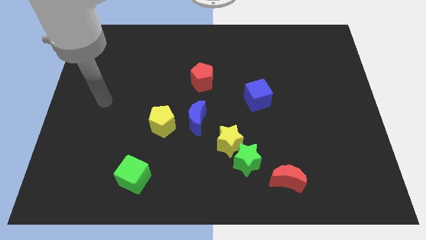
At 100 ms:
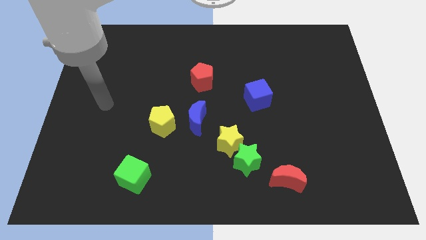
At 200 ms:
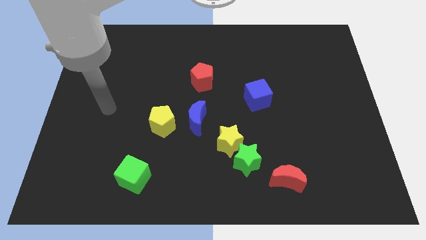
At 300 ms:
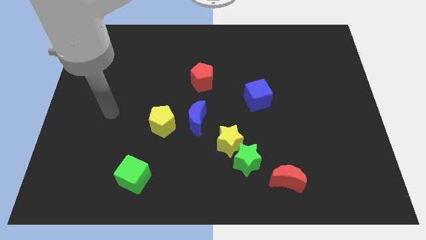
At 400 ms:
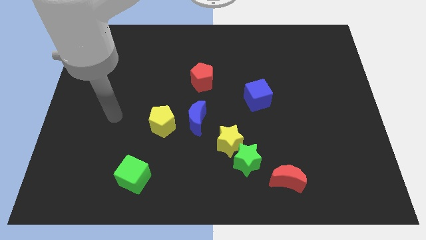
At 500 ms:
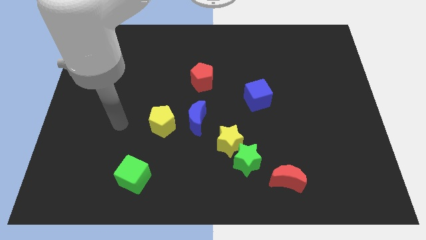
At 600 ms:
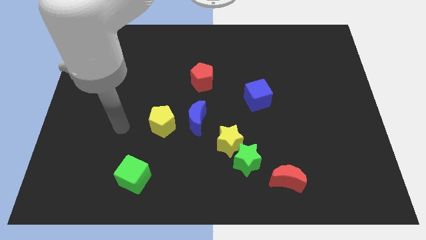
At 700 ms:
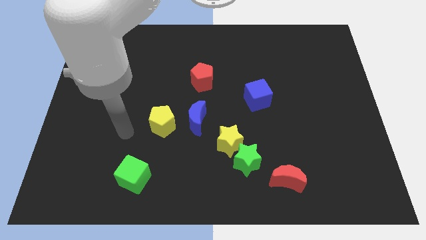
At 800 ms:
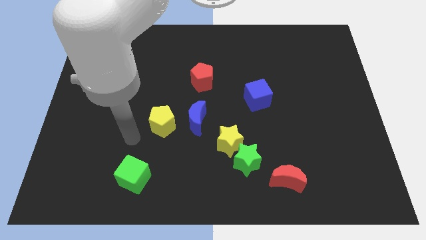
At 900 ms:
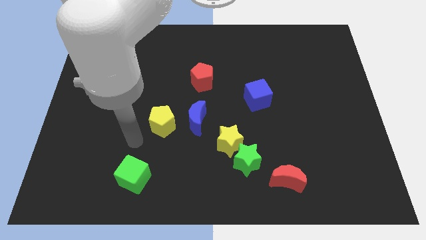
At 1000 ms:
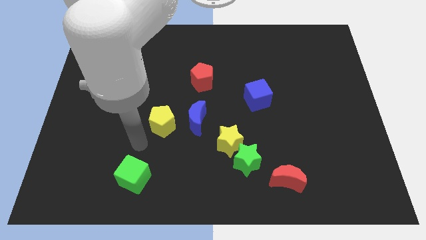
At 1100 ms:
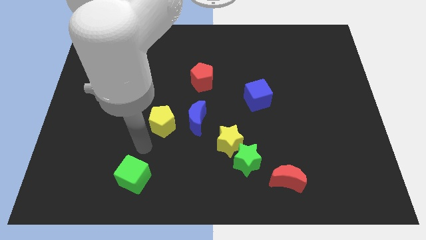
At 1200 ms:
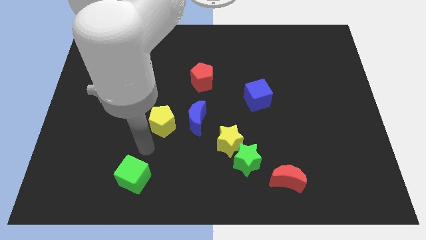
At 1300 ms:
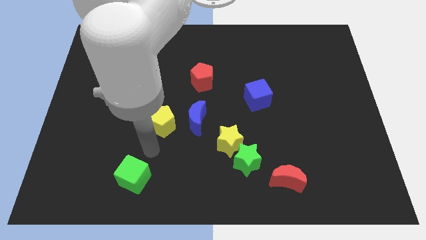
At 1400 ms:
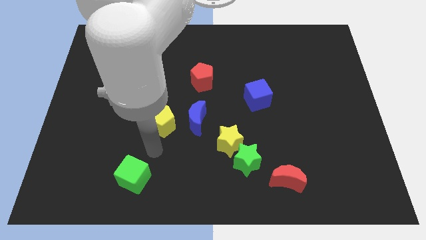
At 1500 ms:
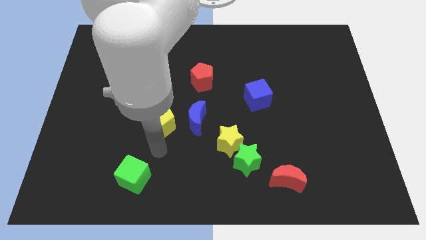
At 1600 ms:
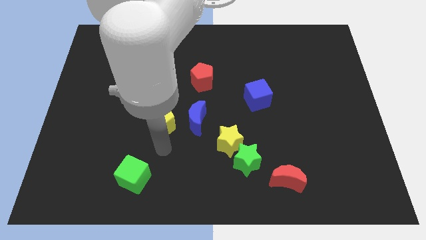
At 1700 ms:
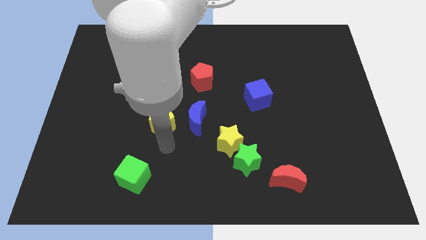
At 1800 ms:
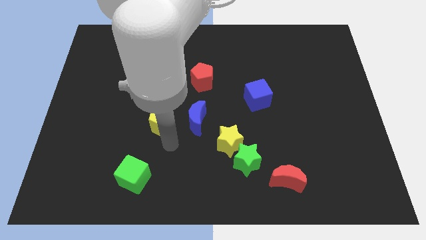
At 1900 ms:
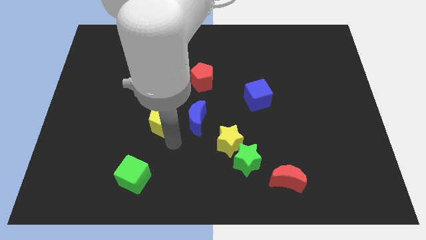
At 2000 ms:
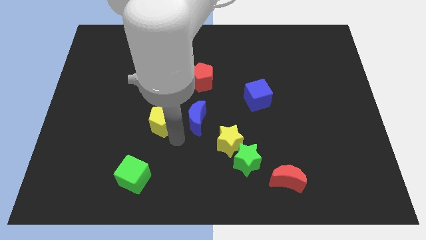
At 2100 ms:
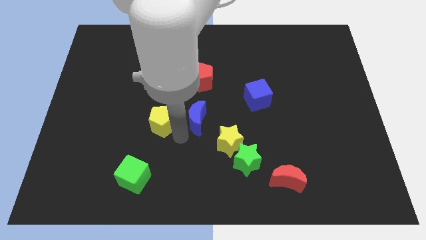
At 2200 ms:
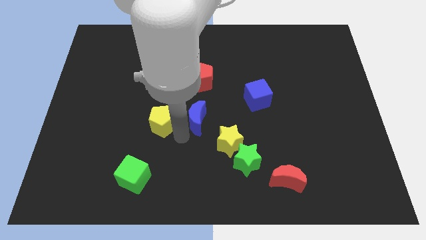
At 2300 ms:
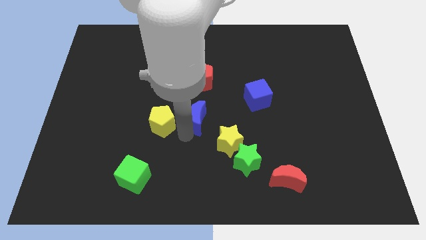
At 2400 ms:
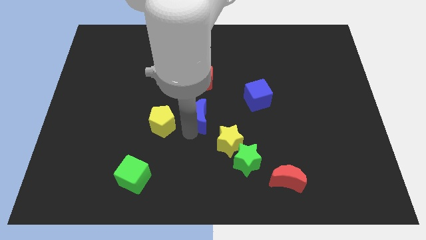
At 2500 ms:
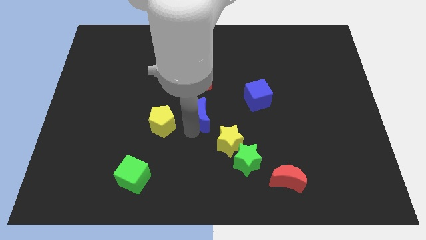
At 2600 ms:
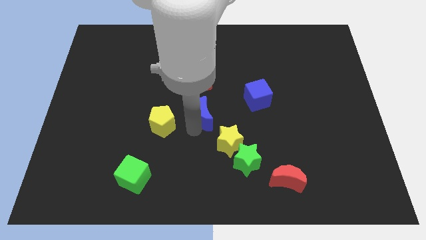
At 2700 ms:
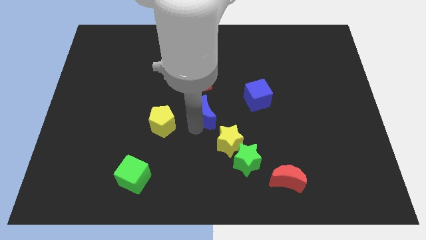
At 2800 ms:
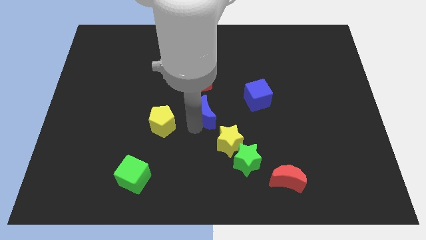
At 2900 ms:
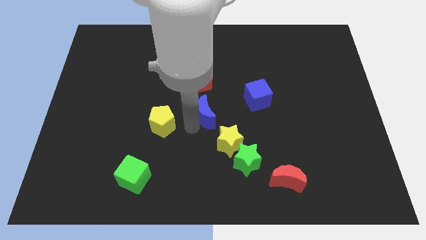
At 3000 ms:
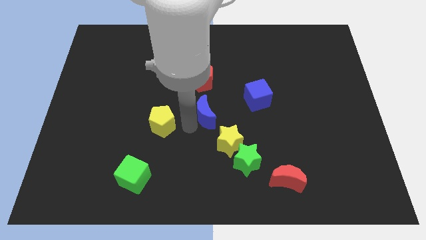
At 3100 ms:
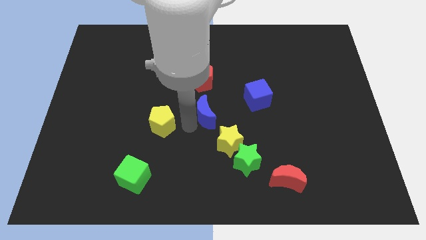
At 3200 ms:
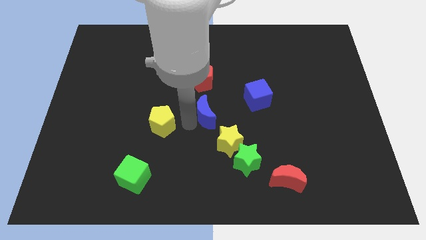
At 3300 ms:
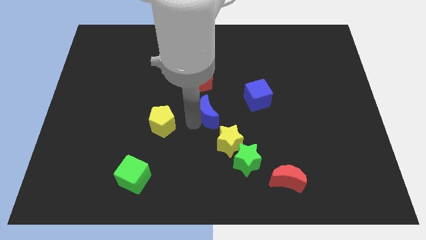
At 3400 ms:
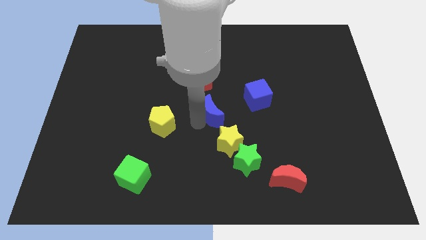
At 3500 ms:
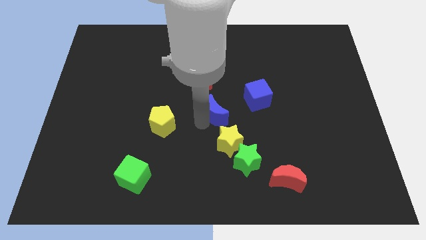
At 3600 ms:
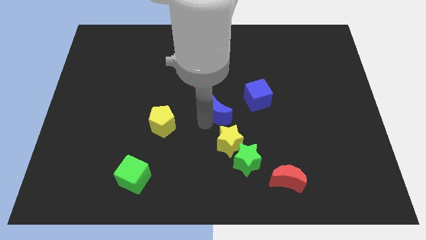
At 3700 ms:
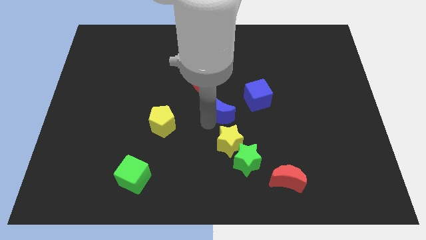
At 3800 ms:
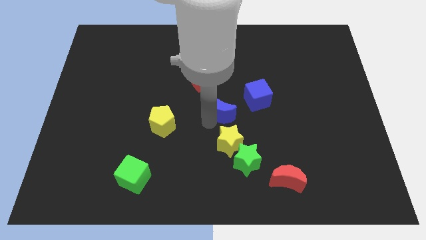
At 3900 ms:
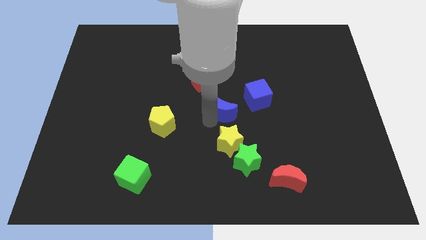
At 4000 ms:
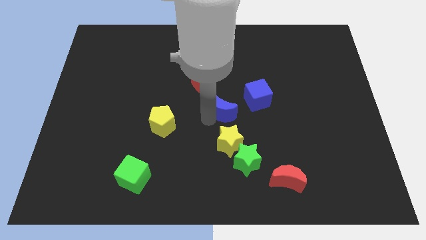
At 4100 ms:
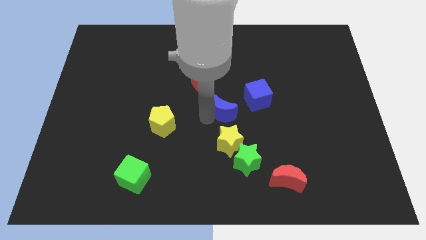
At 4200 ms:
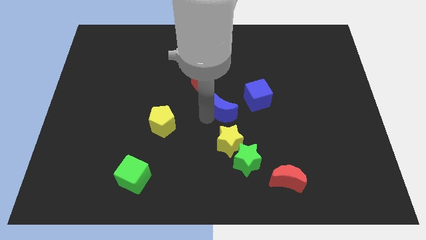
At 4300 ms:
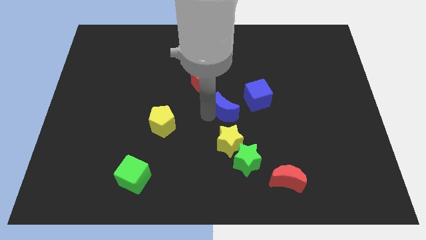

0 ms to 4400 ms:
push the blue moon closer to the blue cube

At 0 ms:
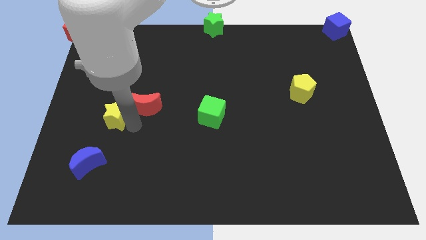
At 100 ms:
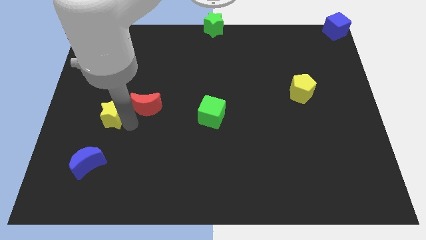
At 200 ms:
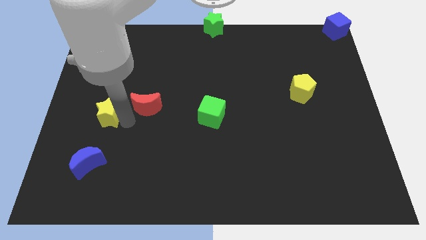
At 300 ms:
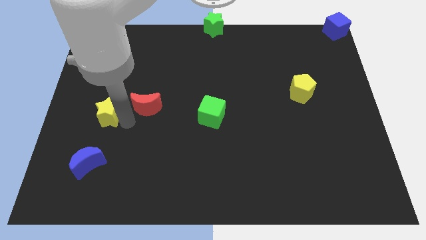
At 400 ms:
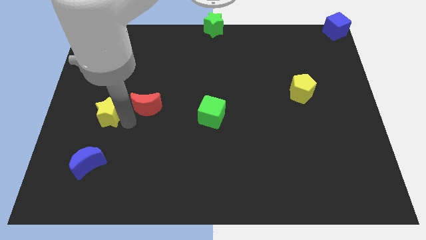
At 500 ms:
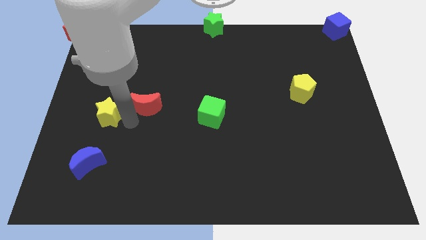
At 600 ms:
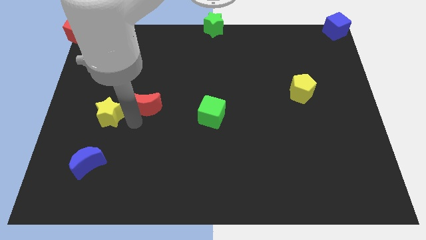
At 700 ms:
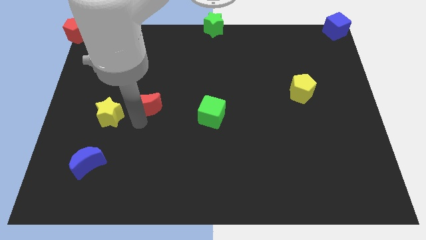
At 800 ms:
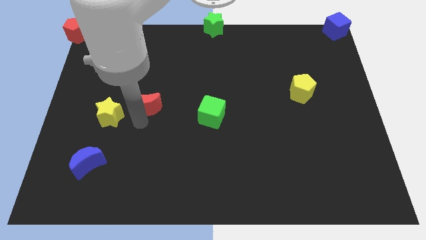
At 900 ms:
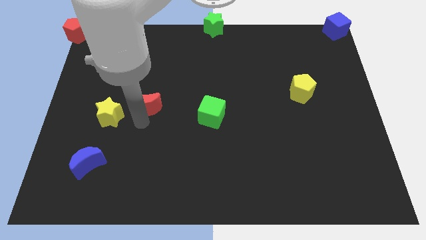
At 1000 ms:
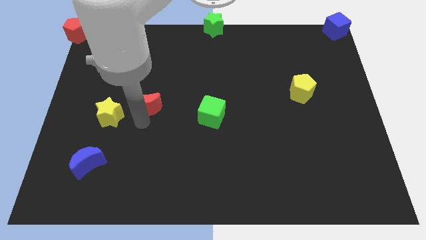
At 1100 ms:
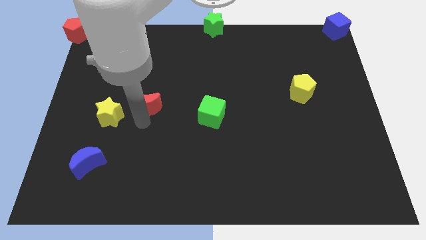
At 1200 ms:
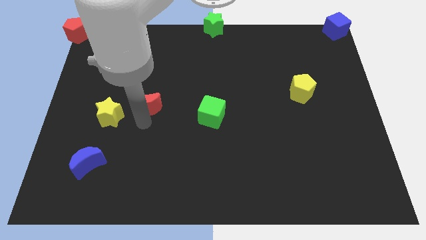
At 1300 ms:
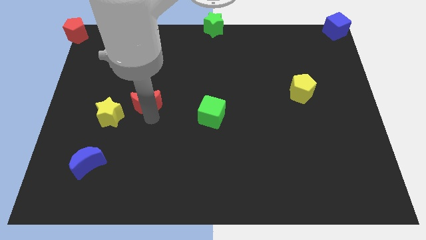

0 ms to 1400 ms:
separate the yellow star from the red moon

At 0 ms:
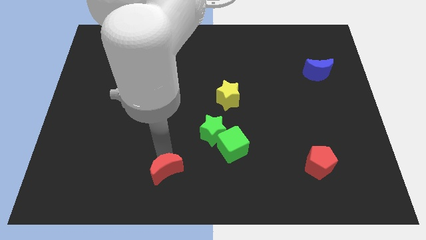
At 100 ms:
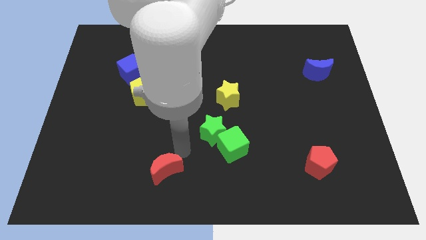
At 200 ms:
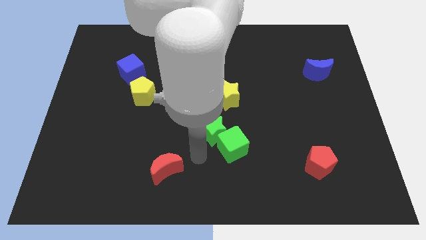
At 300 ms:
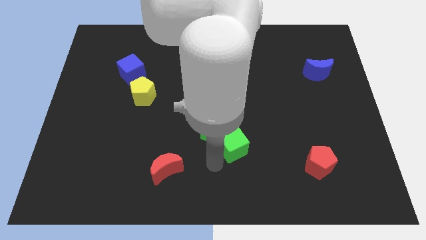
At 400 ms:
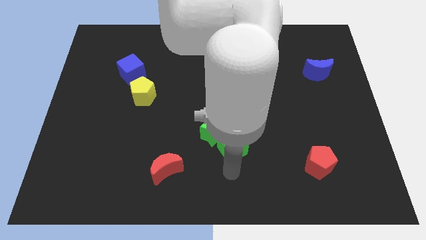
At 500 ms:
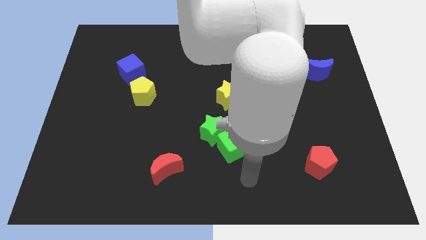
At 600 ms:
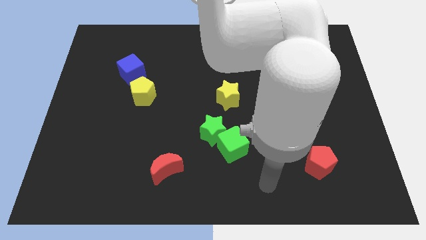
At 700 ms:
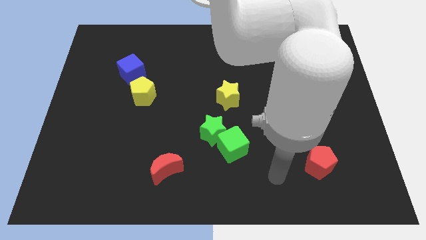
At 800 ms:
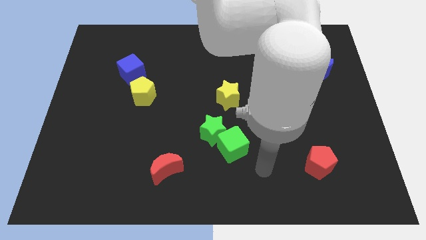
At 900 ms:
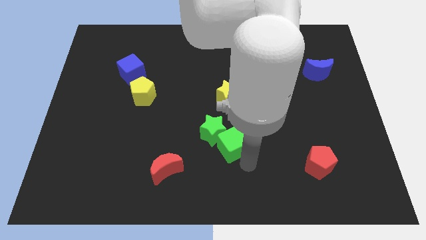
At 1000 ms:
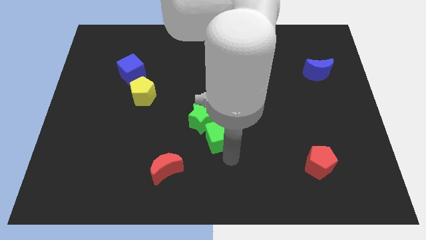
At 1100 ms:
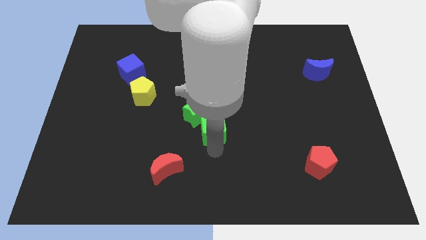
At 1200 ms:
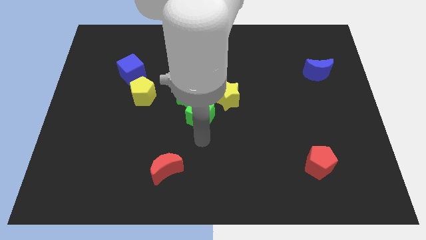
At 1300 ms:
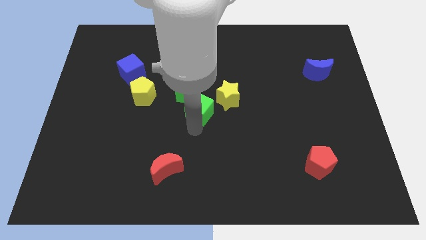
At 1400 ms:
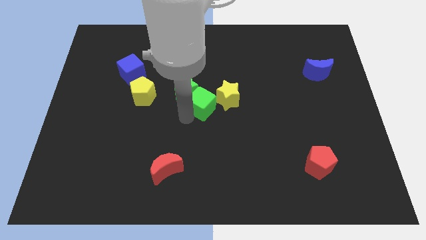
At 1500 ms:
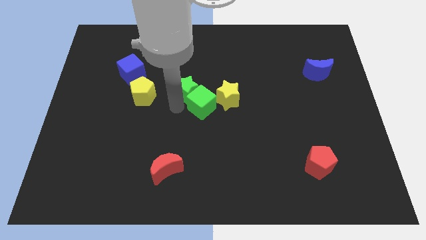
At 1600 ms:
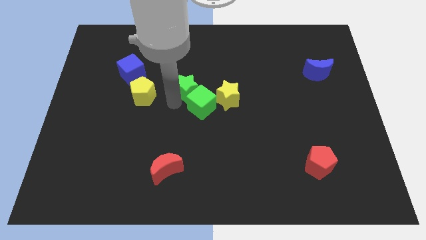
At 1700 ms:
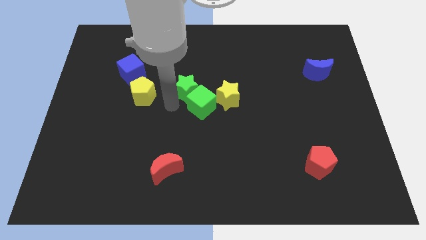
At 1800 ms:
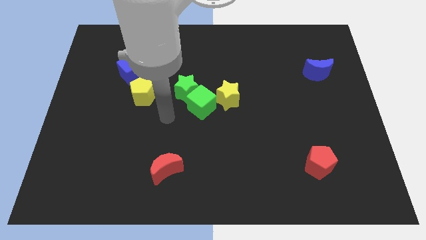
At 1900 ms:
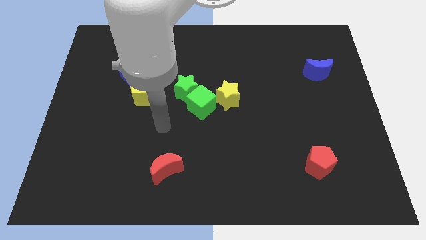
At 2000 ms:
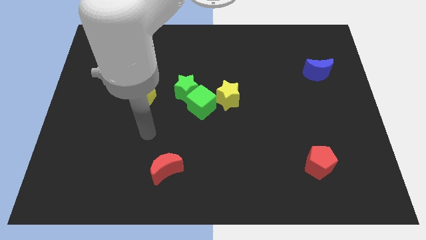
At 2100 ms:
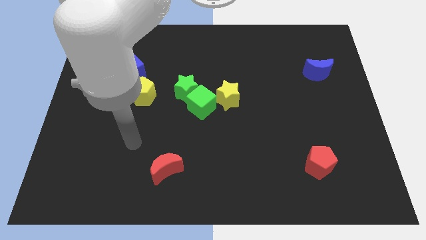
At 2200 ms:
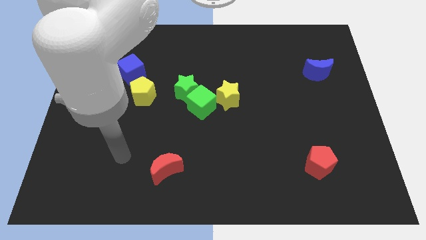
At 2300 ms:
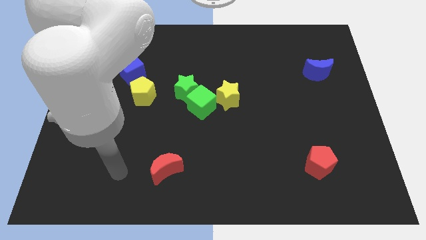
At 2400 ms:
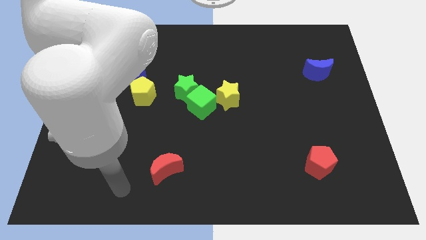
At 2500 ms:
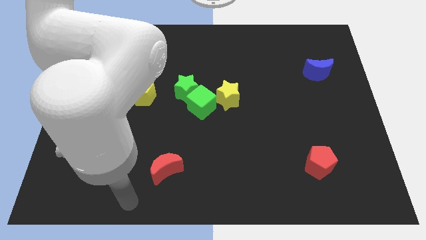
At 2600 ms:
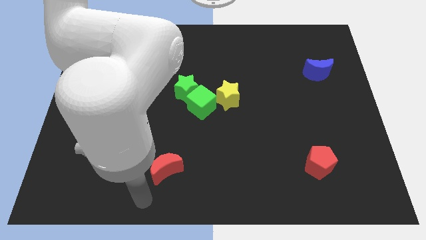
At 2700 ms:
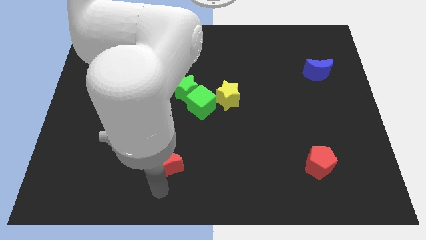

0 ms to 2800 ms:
push the green star with green cube to the left of the yellow star

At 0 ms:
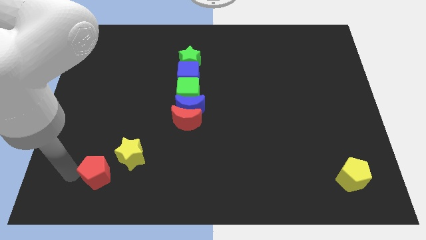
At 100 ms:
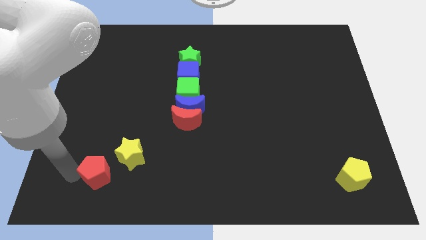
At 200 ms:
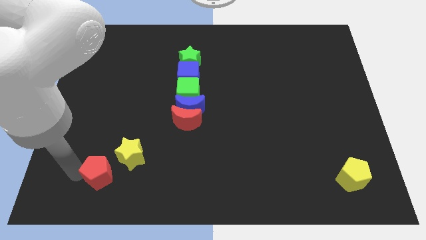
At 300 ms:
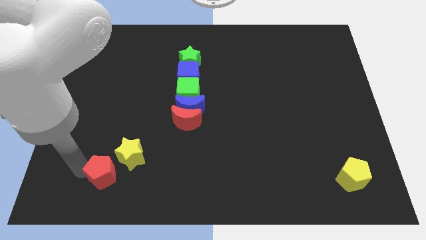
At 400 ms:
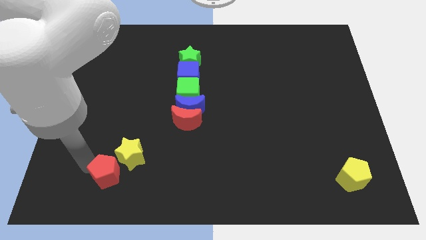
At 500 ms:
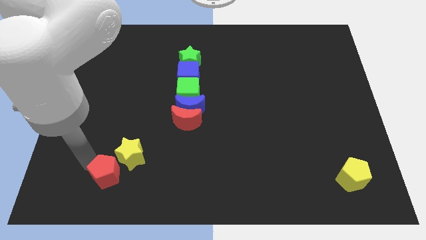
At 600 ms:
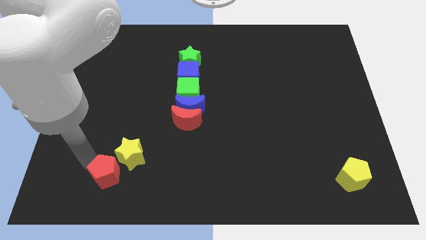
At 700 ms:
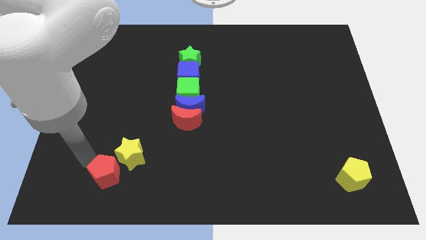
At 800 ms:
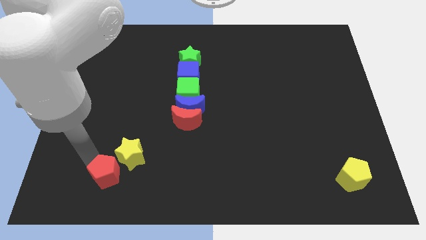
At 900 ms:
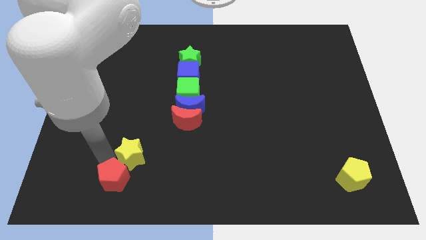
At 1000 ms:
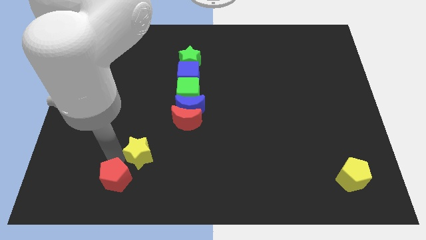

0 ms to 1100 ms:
push the red pentagon towards the yellow star
